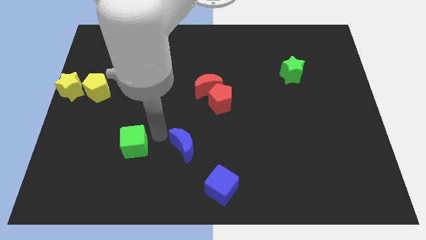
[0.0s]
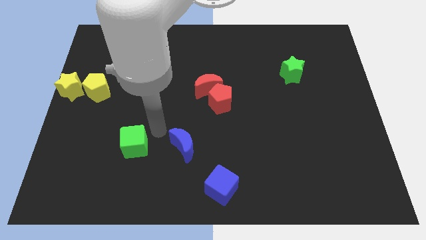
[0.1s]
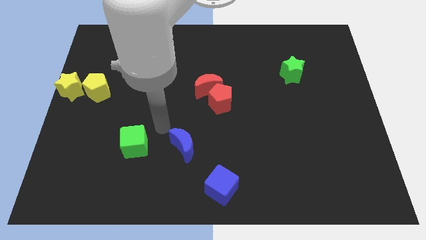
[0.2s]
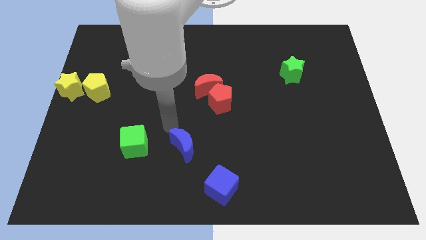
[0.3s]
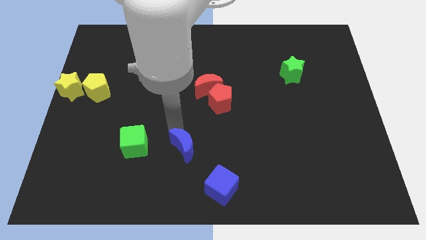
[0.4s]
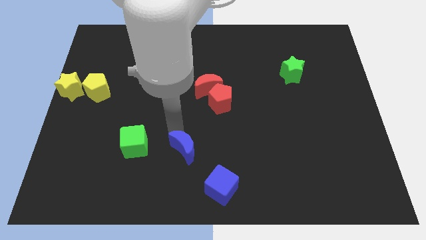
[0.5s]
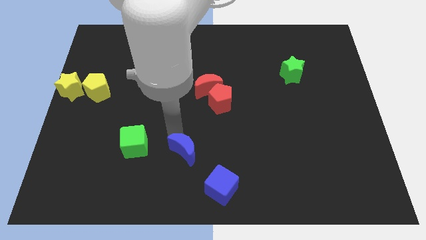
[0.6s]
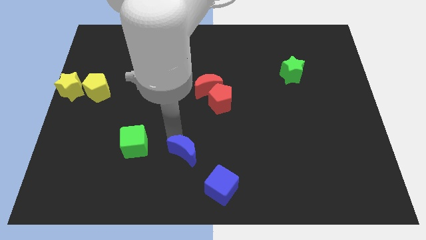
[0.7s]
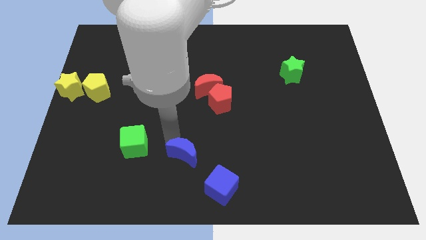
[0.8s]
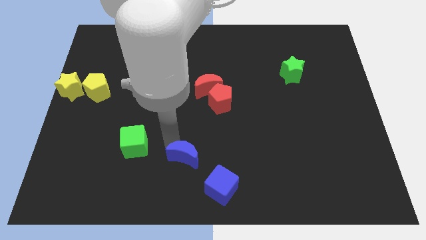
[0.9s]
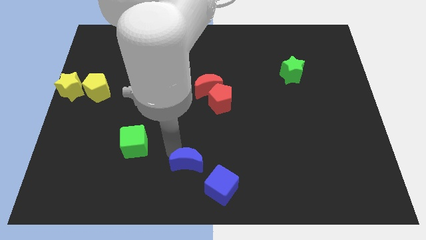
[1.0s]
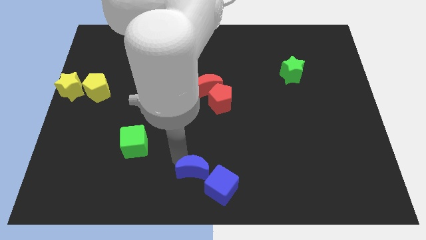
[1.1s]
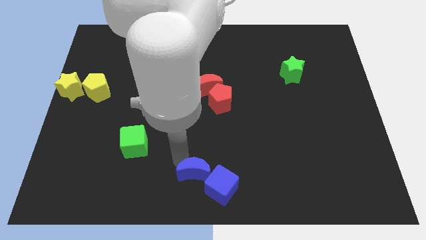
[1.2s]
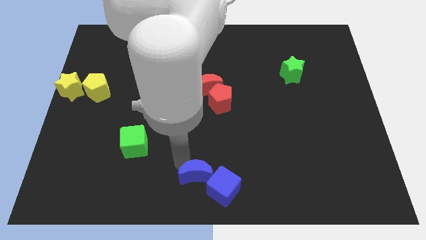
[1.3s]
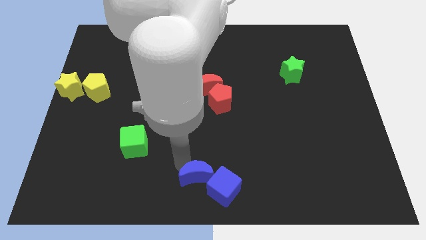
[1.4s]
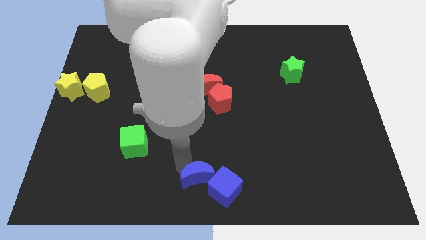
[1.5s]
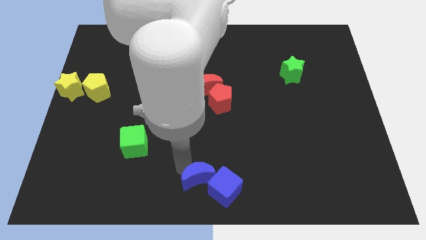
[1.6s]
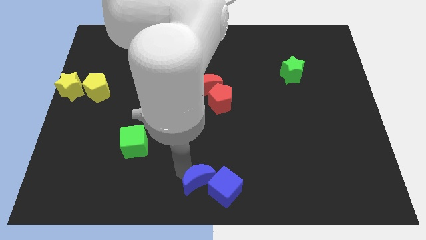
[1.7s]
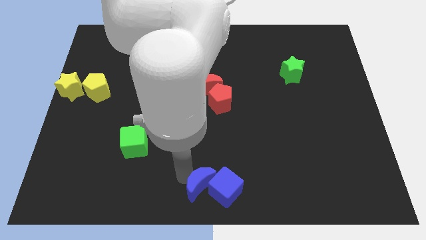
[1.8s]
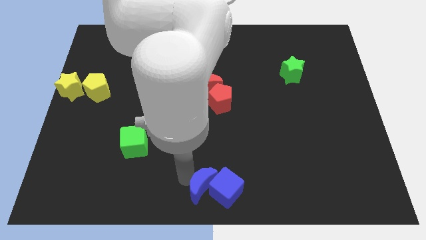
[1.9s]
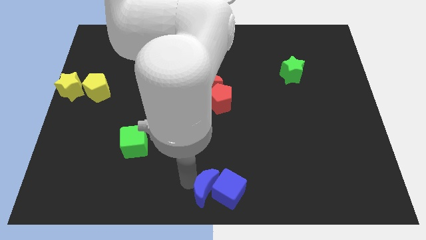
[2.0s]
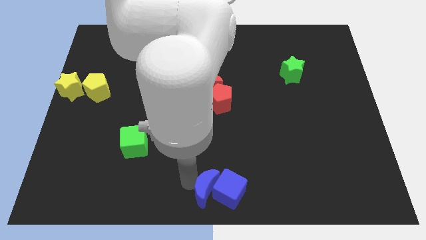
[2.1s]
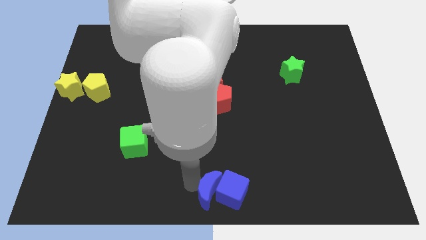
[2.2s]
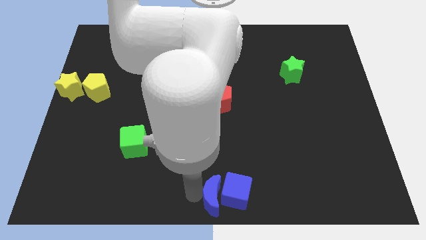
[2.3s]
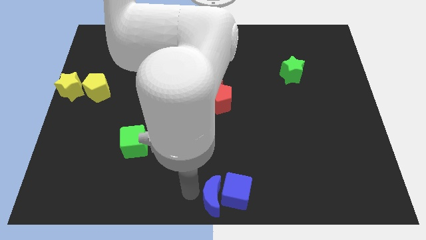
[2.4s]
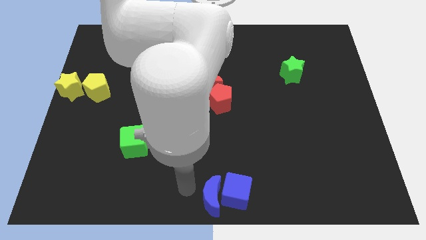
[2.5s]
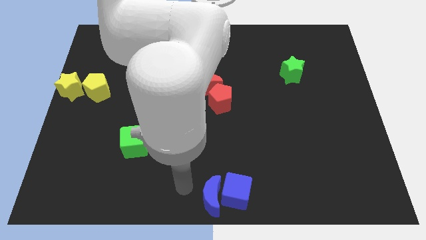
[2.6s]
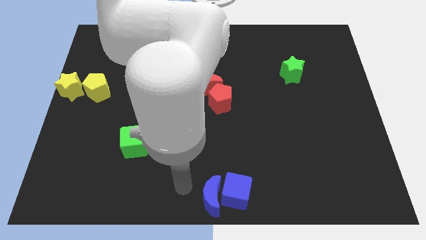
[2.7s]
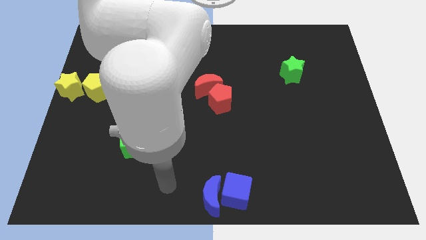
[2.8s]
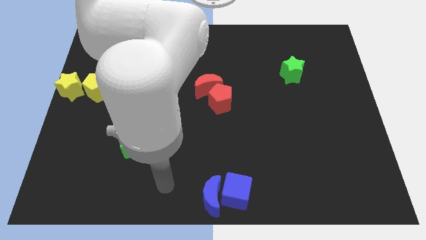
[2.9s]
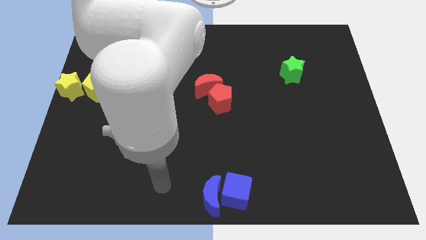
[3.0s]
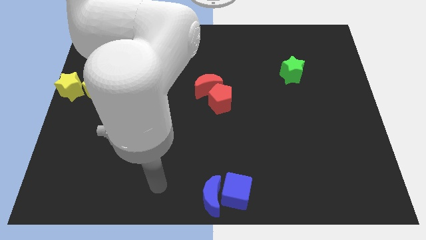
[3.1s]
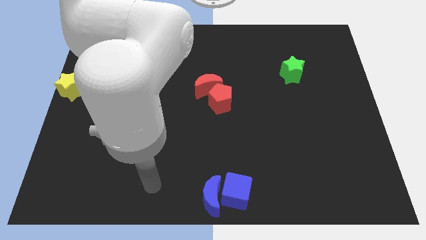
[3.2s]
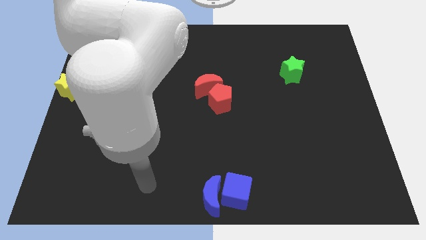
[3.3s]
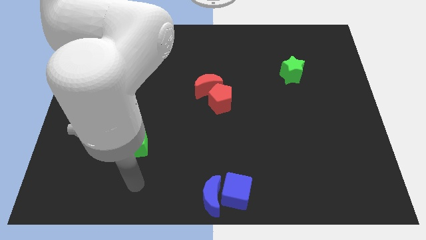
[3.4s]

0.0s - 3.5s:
move blue crescent into blue cube

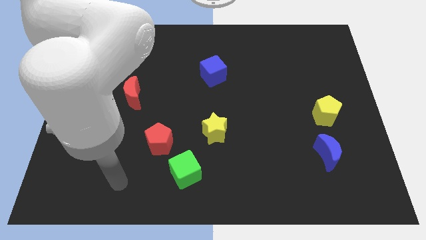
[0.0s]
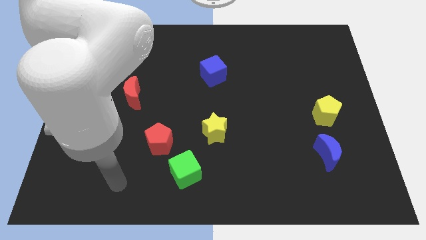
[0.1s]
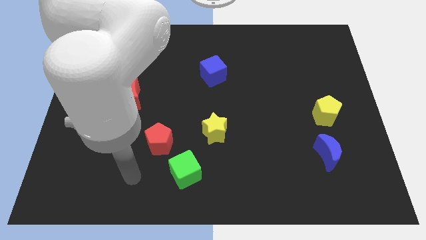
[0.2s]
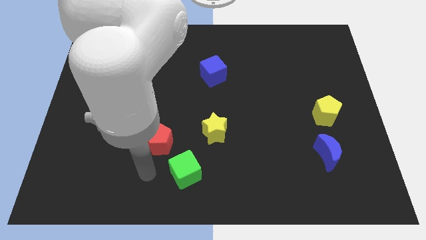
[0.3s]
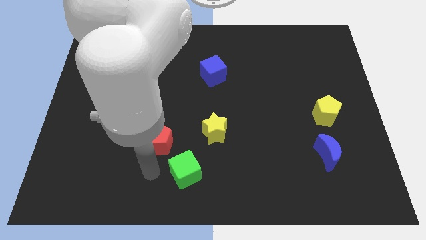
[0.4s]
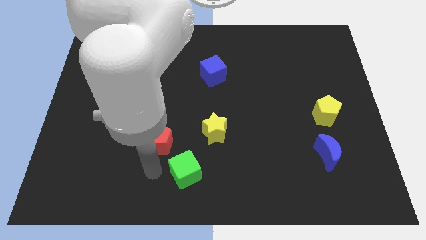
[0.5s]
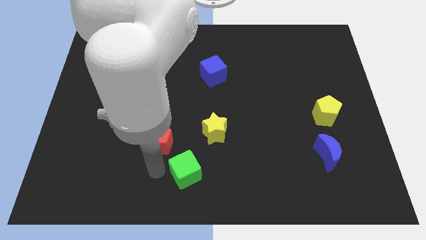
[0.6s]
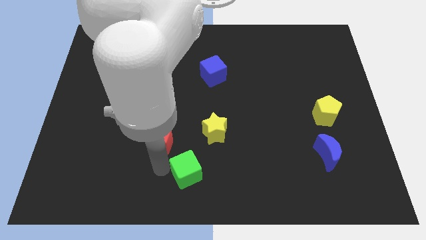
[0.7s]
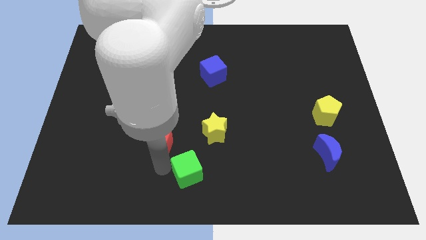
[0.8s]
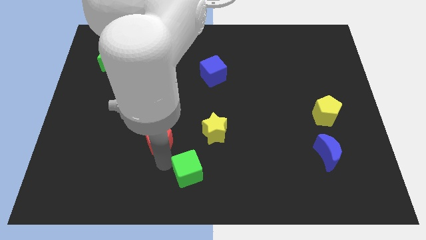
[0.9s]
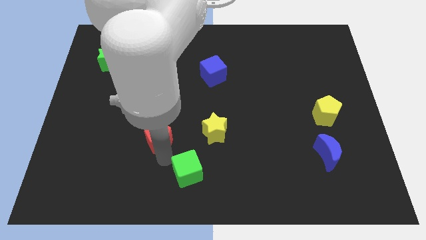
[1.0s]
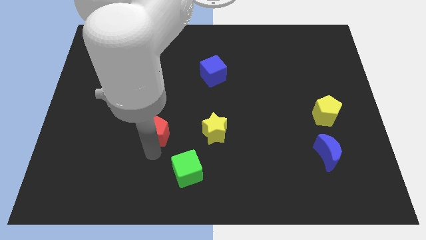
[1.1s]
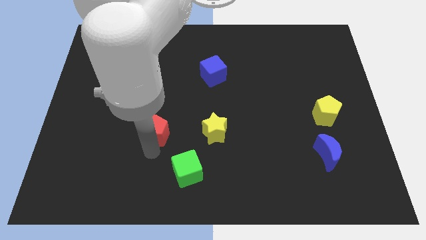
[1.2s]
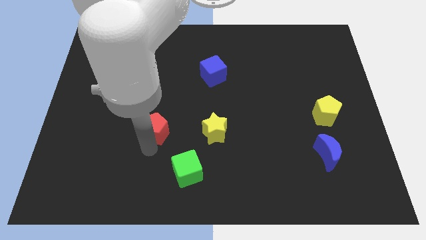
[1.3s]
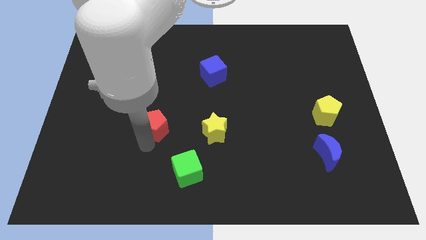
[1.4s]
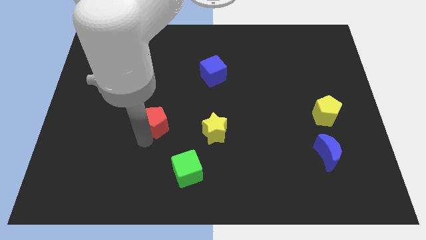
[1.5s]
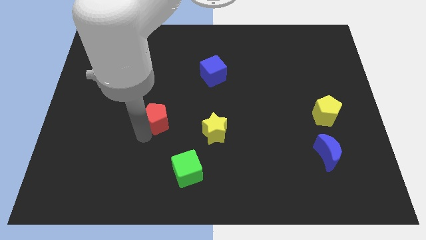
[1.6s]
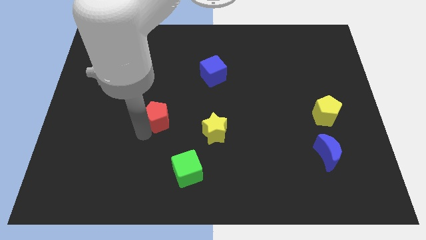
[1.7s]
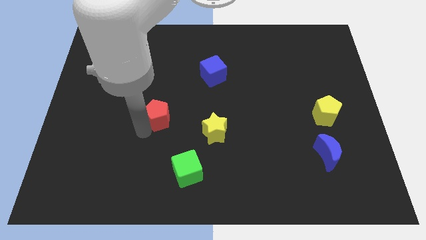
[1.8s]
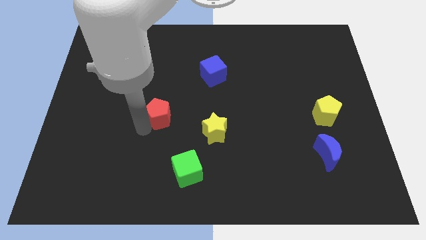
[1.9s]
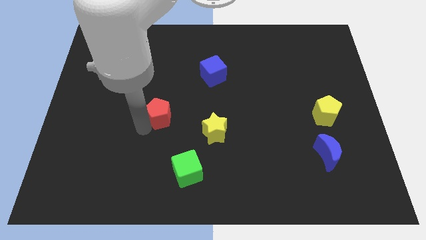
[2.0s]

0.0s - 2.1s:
separate red pentagon from green cube

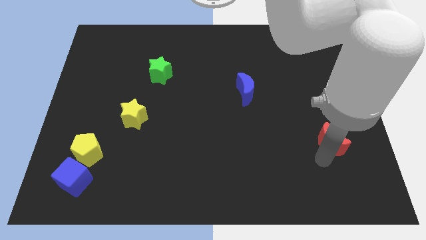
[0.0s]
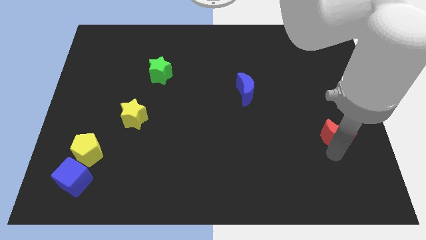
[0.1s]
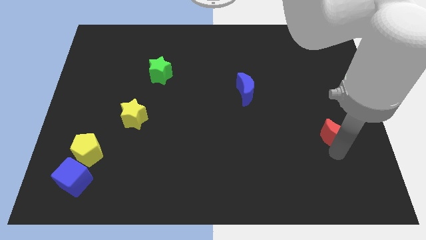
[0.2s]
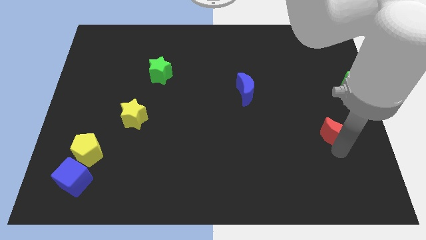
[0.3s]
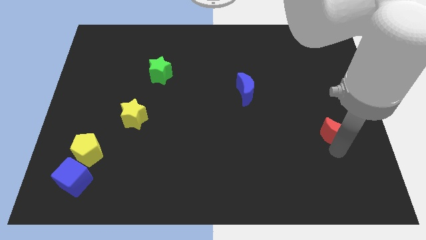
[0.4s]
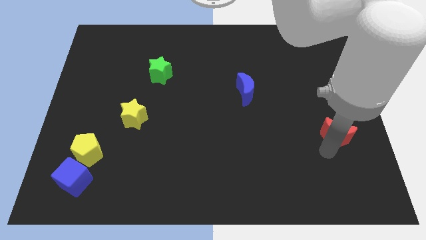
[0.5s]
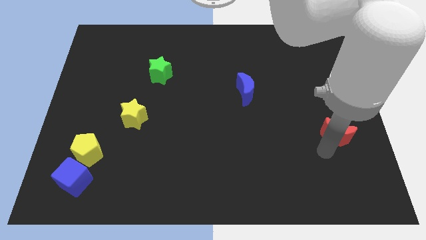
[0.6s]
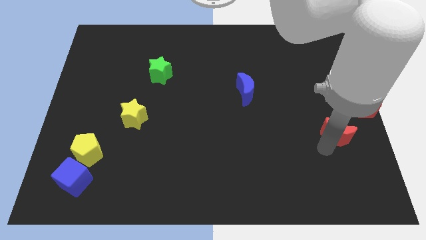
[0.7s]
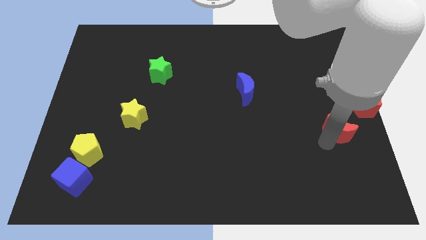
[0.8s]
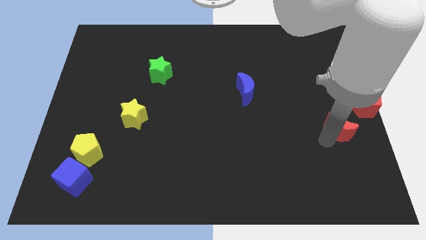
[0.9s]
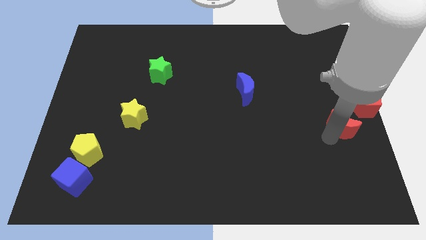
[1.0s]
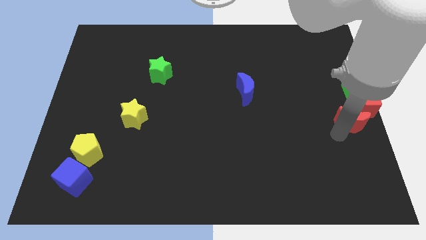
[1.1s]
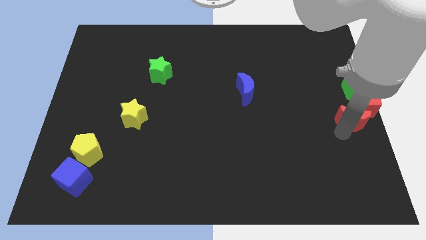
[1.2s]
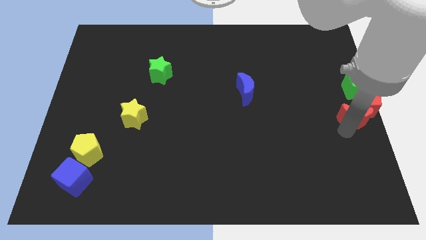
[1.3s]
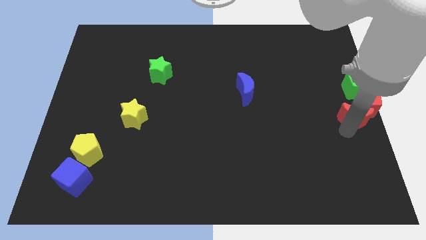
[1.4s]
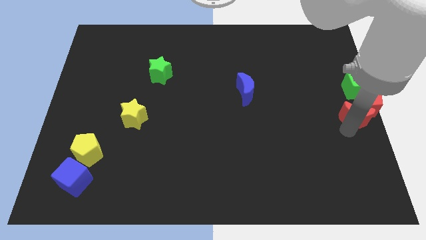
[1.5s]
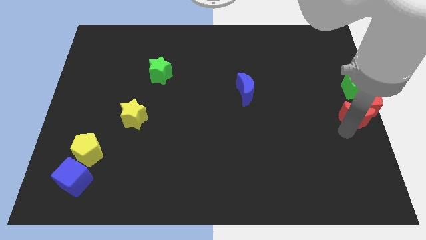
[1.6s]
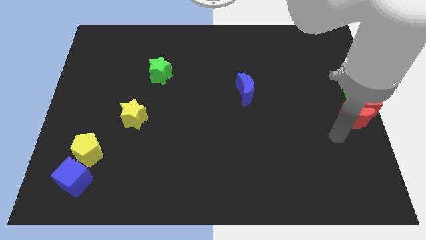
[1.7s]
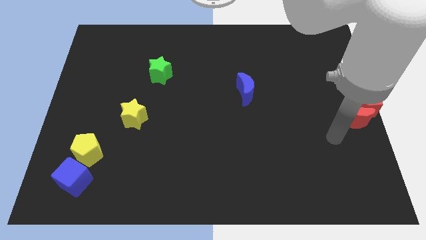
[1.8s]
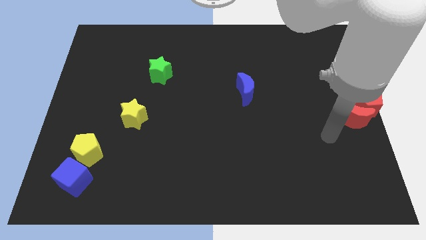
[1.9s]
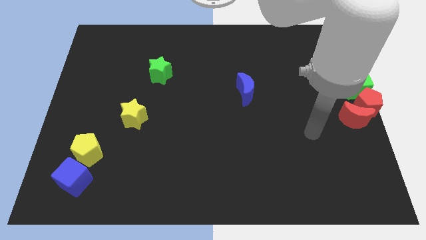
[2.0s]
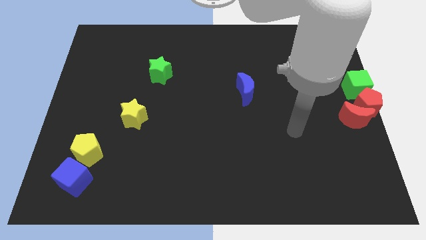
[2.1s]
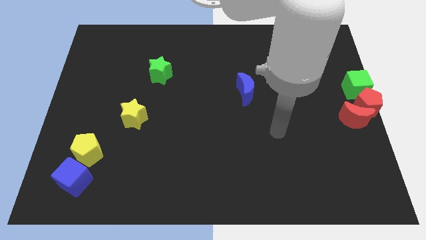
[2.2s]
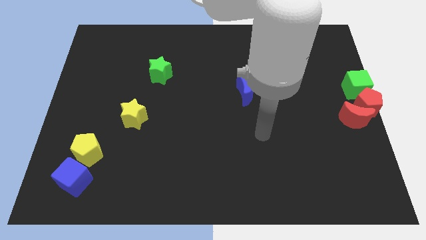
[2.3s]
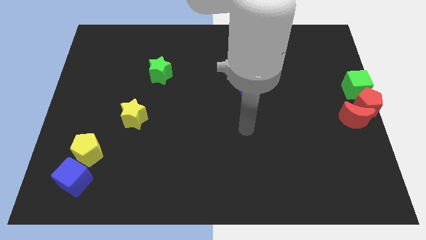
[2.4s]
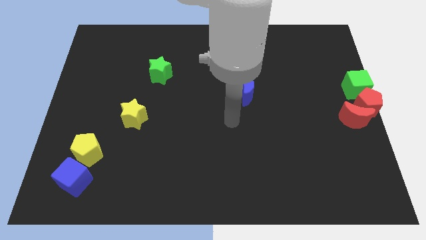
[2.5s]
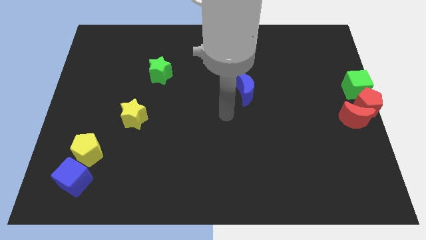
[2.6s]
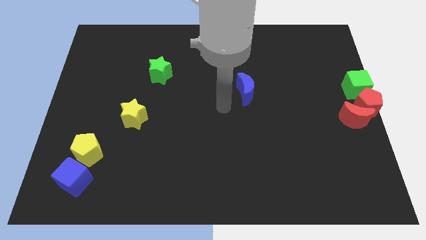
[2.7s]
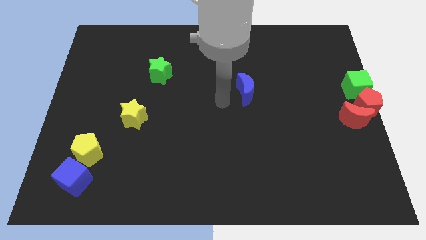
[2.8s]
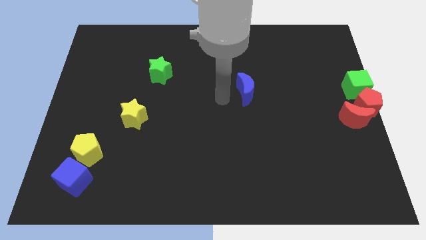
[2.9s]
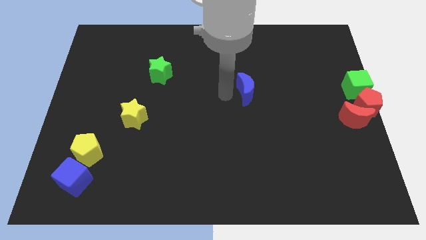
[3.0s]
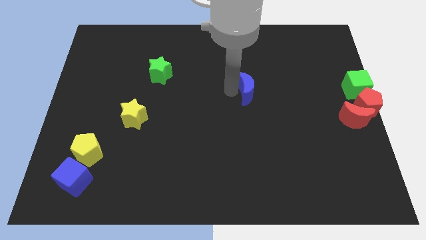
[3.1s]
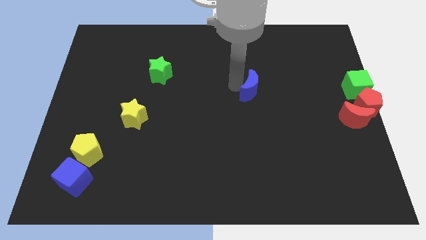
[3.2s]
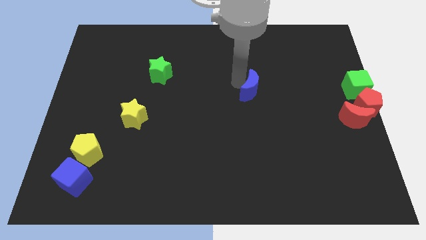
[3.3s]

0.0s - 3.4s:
move your arm away from the red moon

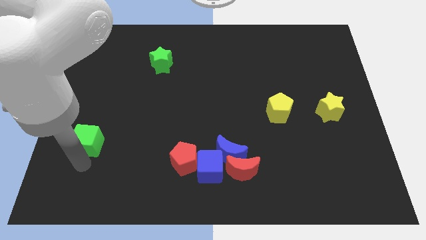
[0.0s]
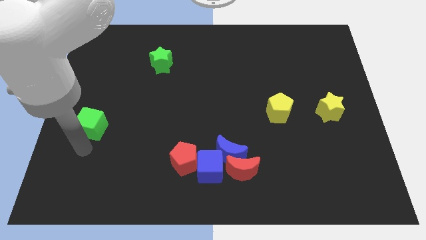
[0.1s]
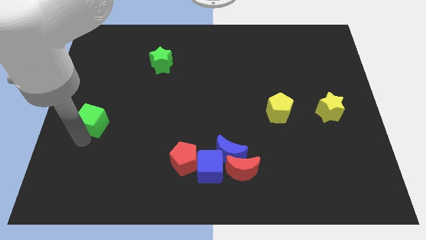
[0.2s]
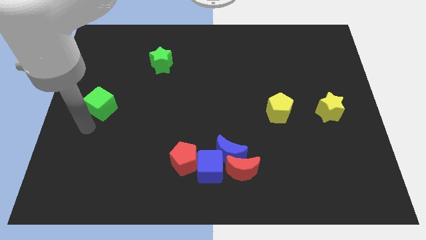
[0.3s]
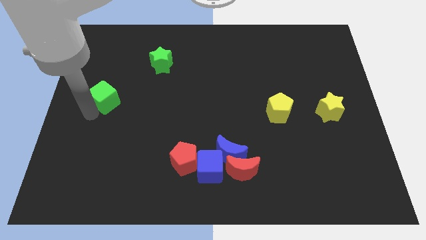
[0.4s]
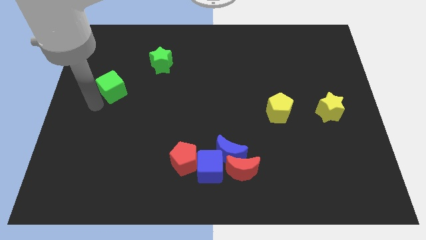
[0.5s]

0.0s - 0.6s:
push green cube upwards
